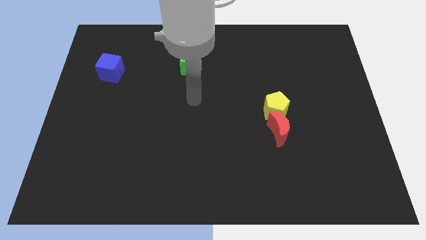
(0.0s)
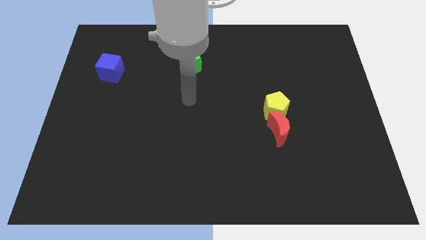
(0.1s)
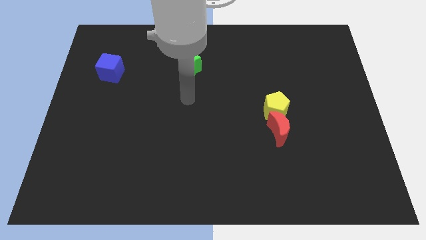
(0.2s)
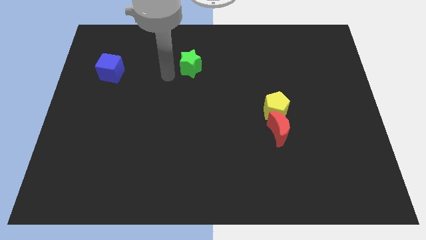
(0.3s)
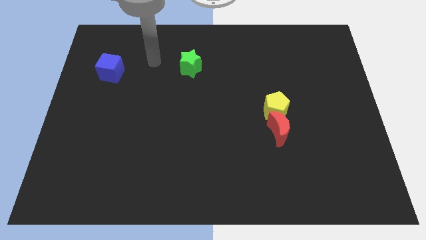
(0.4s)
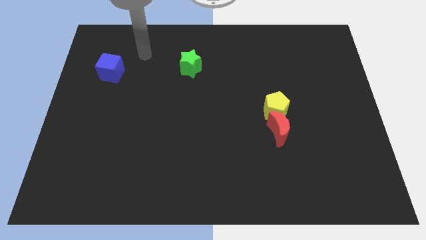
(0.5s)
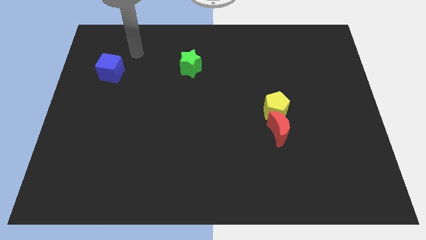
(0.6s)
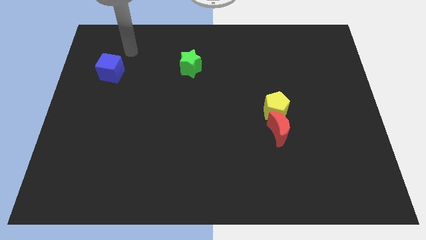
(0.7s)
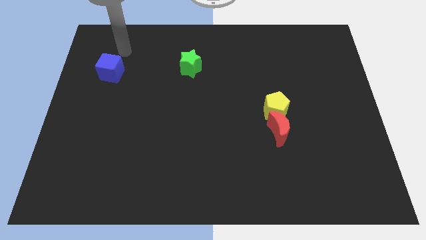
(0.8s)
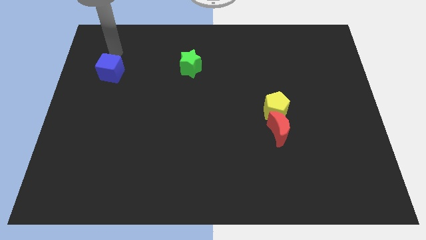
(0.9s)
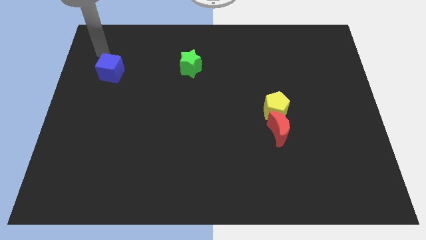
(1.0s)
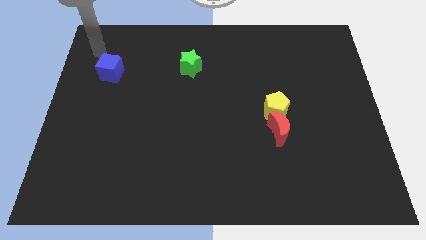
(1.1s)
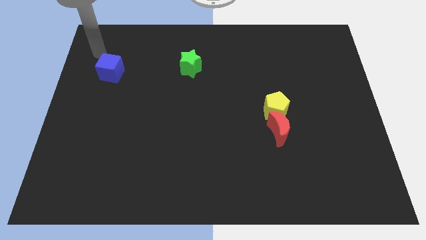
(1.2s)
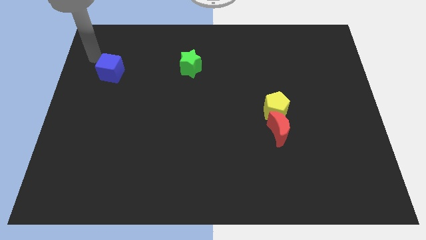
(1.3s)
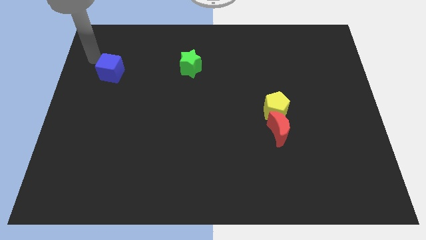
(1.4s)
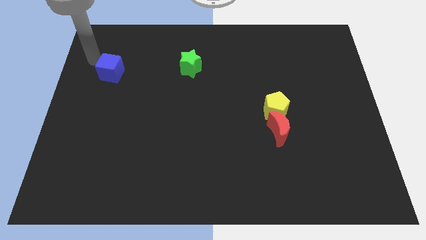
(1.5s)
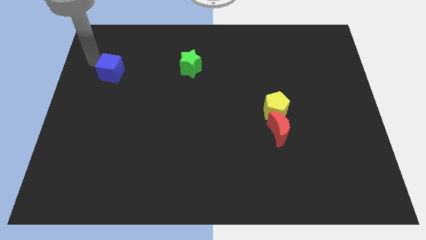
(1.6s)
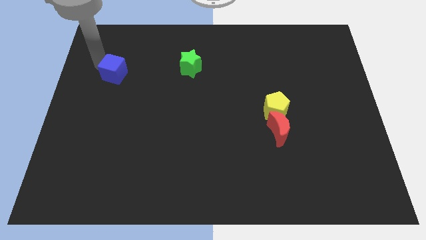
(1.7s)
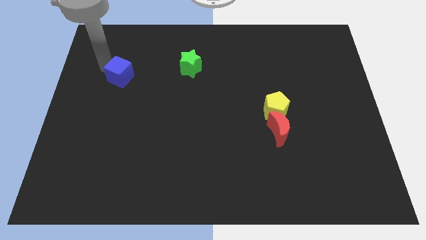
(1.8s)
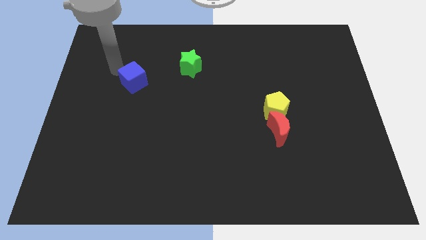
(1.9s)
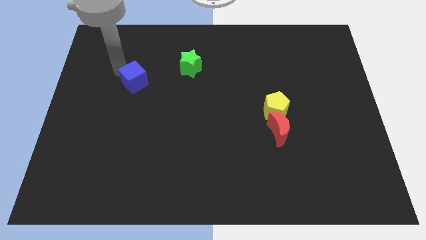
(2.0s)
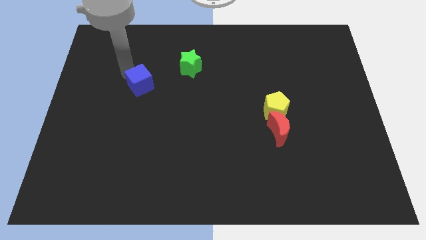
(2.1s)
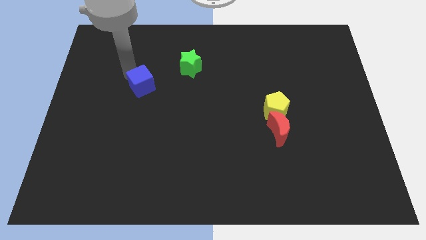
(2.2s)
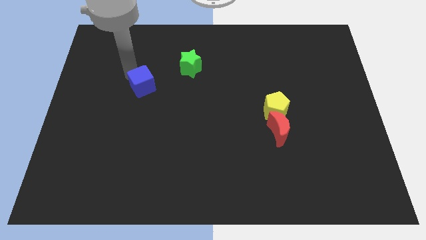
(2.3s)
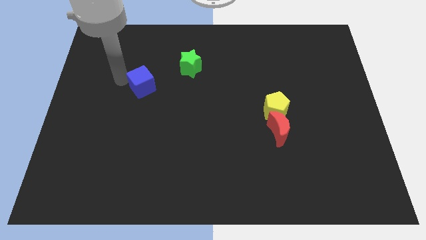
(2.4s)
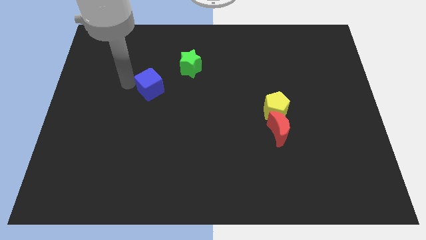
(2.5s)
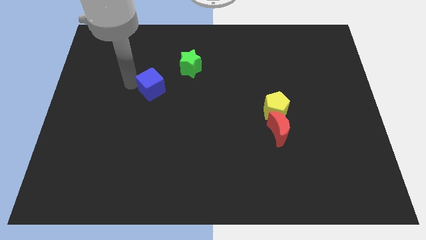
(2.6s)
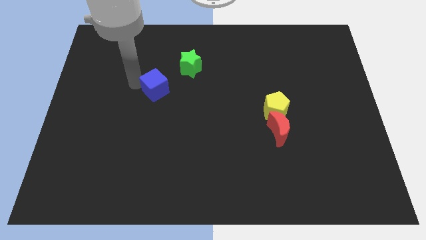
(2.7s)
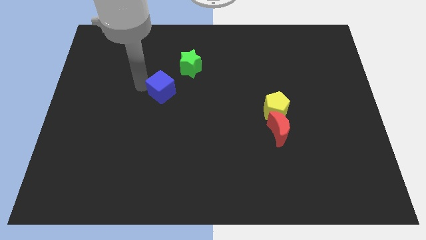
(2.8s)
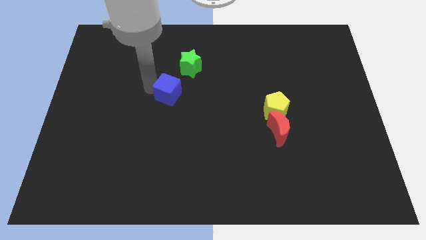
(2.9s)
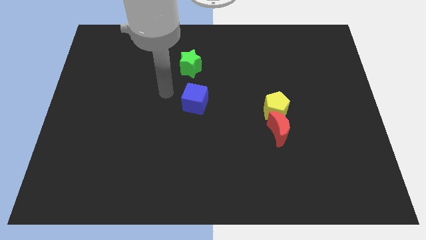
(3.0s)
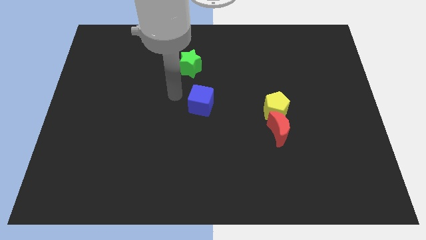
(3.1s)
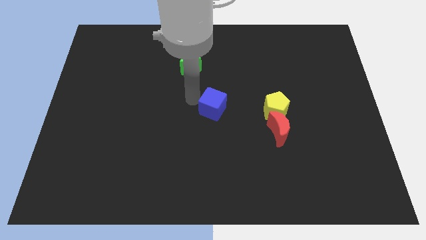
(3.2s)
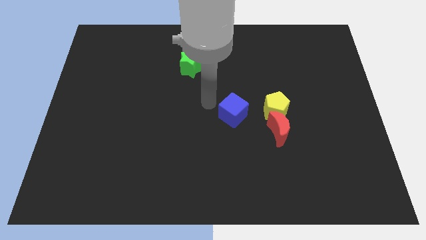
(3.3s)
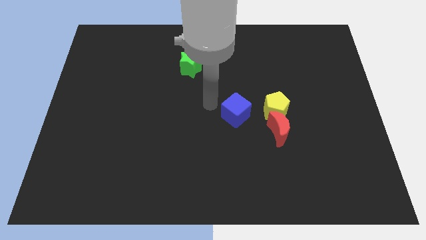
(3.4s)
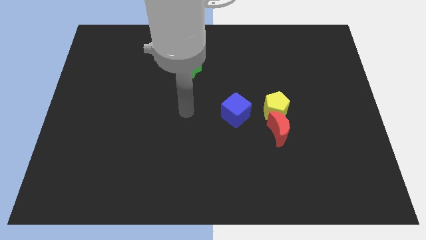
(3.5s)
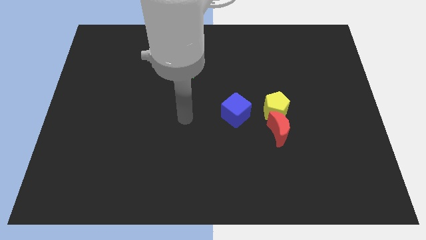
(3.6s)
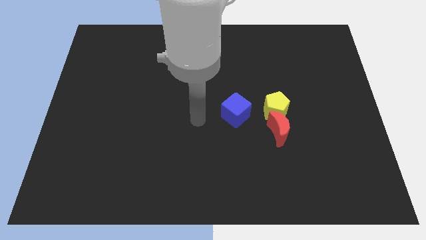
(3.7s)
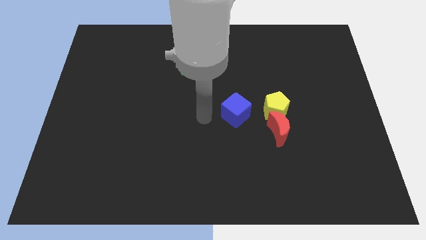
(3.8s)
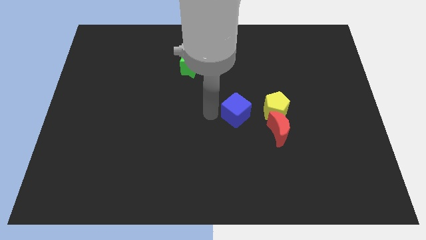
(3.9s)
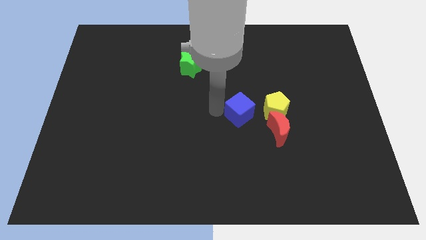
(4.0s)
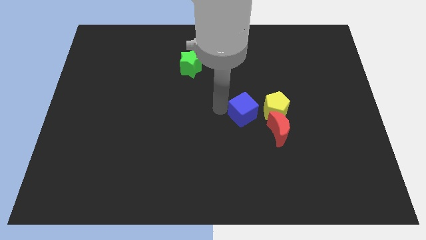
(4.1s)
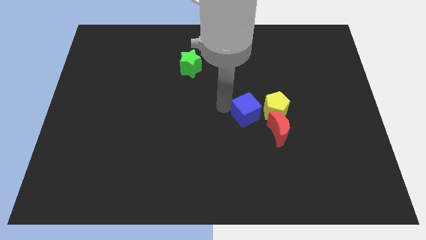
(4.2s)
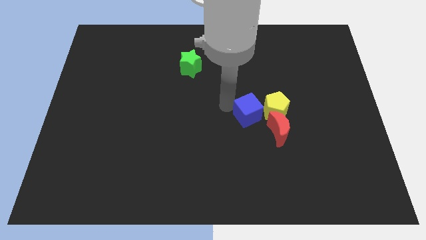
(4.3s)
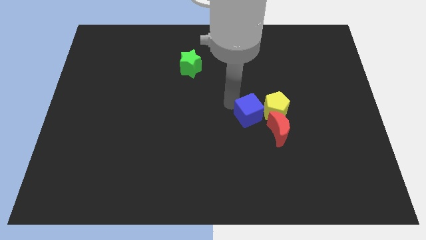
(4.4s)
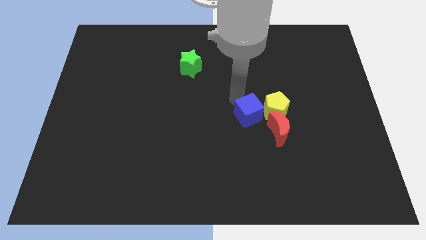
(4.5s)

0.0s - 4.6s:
push the cube towards the yellow pentagon

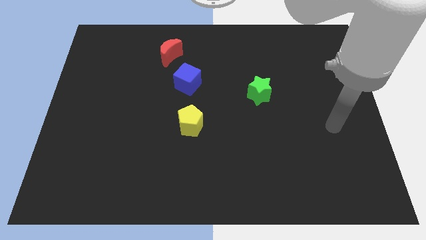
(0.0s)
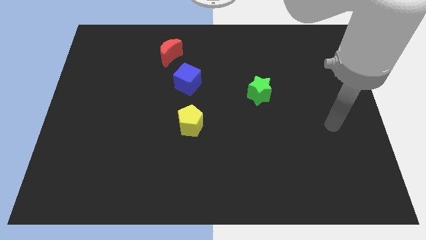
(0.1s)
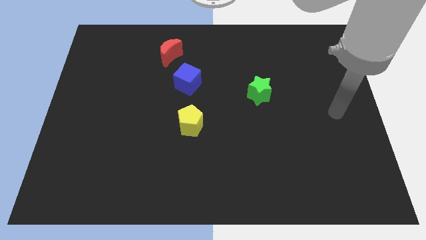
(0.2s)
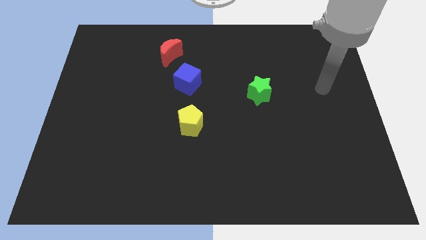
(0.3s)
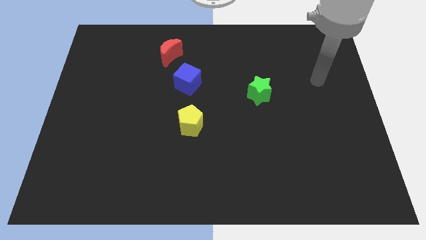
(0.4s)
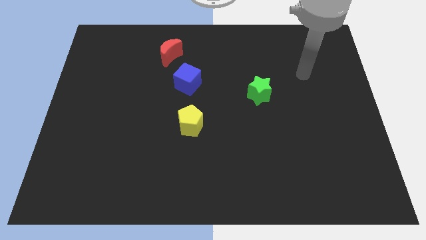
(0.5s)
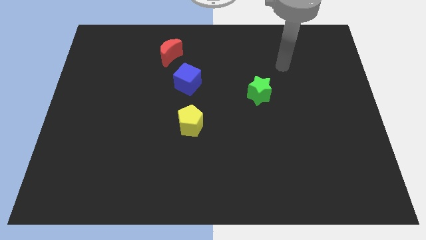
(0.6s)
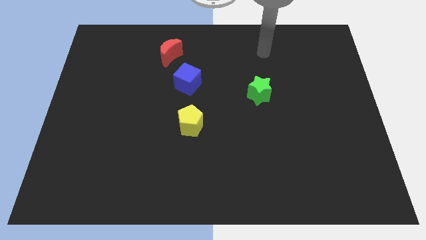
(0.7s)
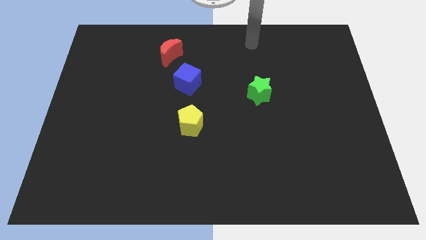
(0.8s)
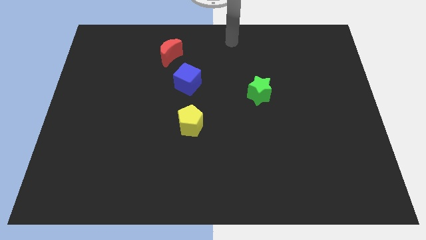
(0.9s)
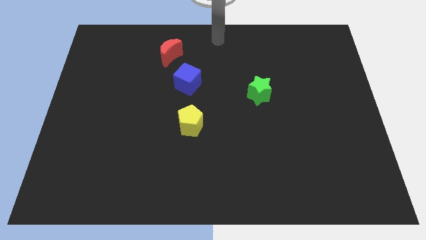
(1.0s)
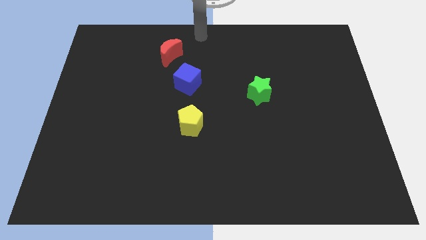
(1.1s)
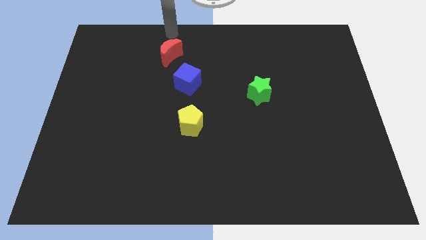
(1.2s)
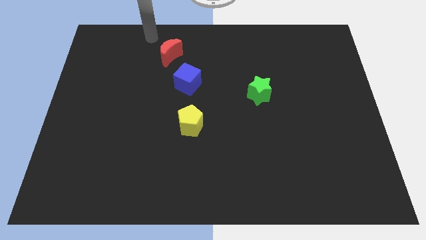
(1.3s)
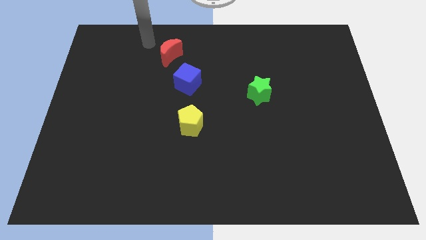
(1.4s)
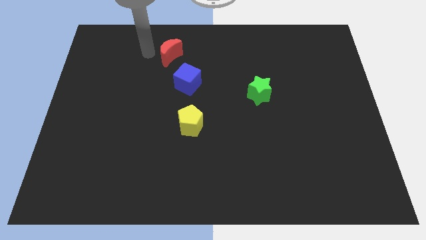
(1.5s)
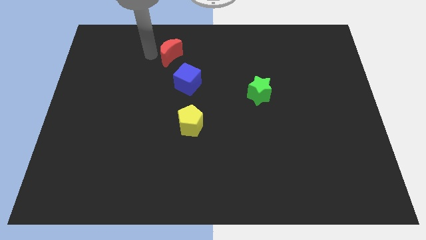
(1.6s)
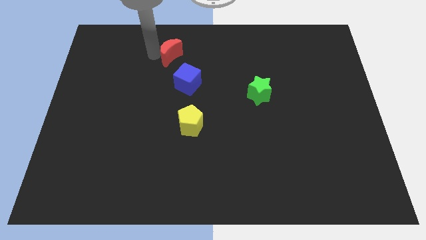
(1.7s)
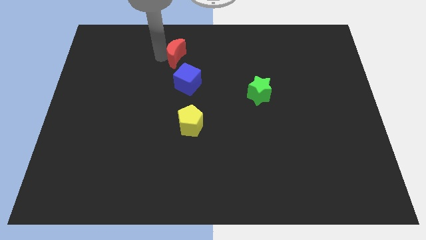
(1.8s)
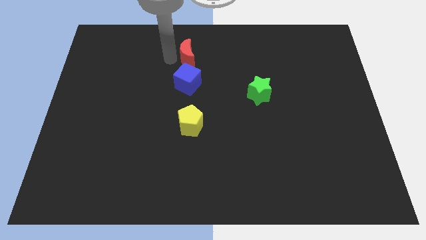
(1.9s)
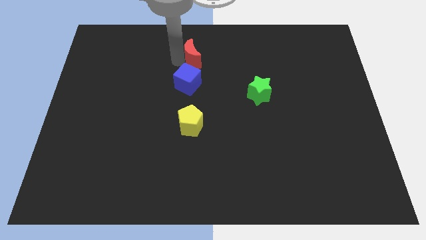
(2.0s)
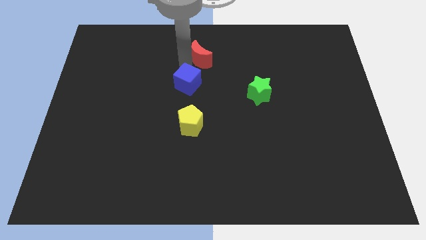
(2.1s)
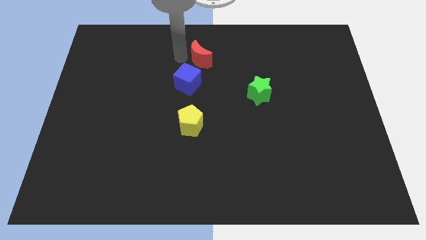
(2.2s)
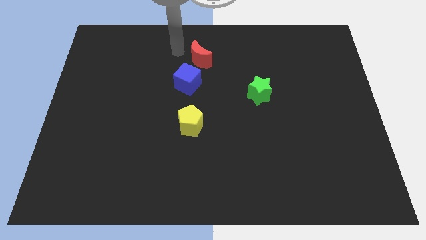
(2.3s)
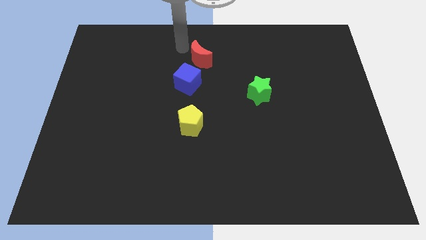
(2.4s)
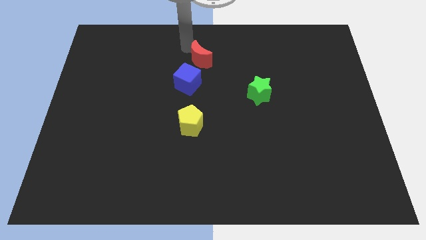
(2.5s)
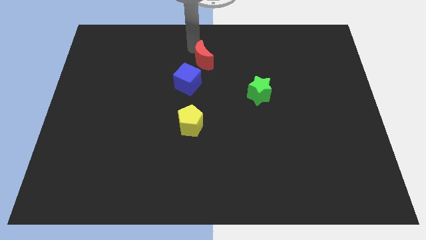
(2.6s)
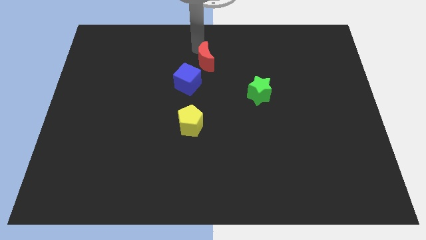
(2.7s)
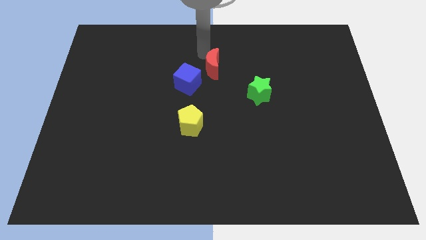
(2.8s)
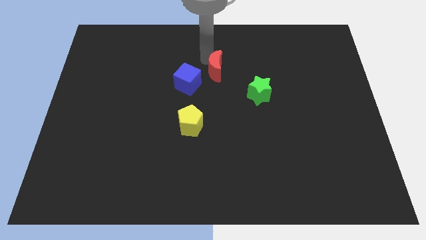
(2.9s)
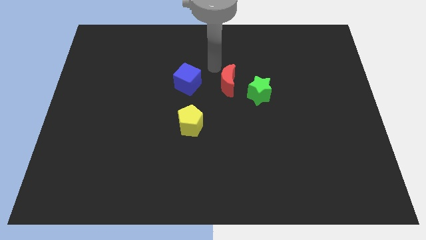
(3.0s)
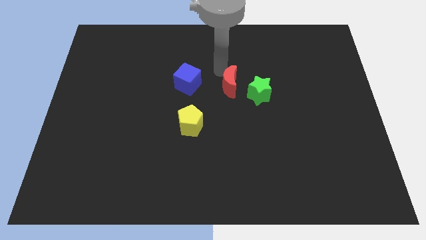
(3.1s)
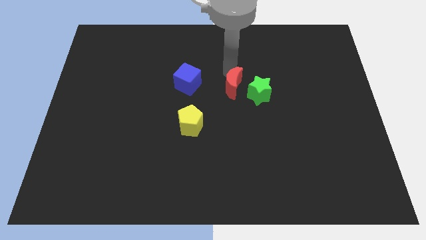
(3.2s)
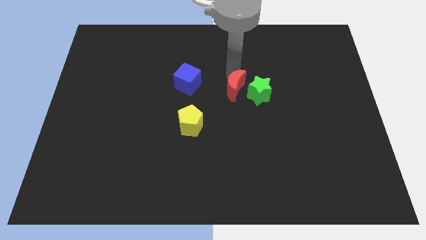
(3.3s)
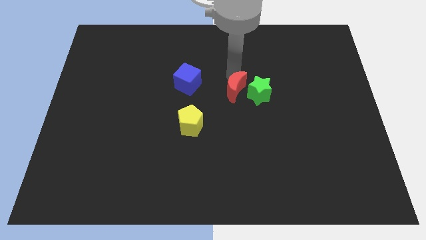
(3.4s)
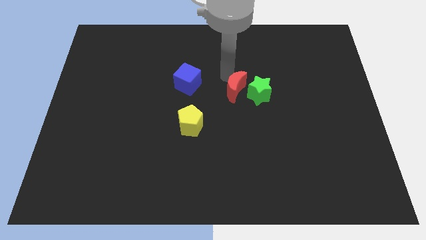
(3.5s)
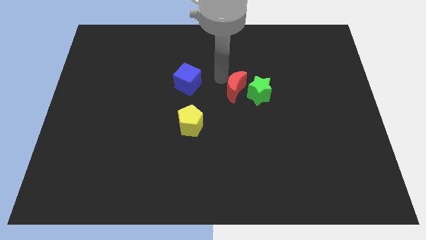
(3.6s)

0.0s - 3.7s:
slide the red moon to the green star
